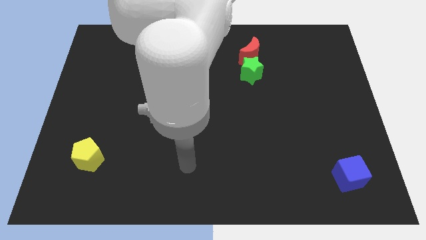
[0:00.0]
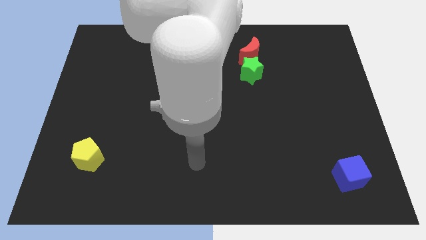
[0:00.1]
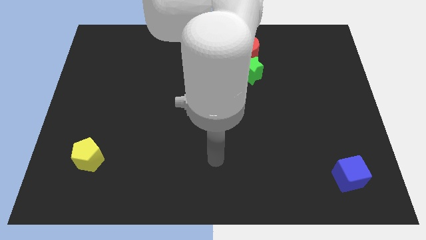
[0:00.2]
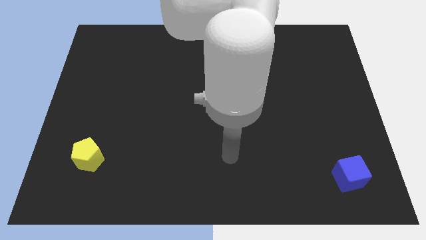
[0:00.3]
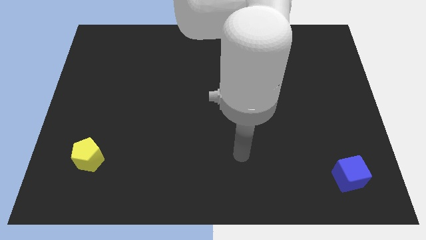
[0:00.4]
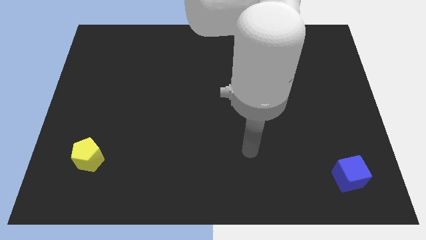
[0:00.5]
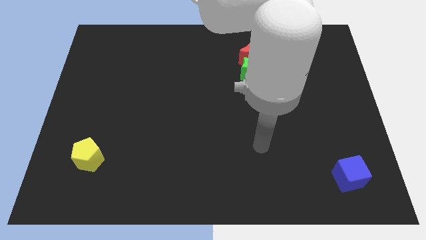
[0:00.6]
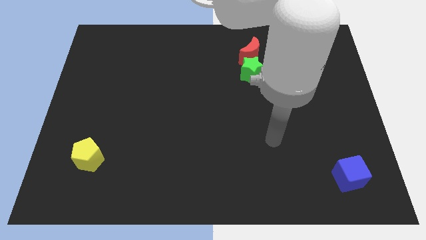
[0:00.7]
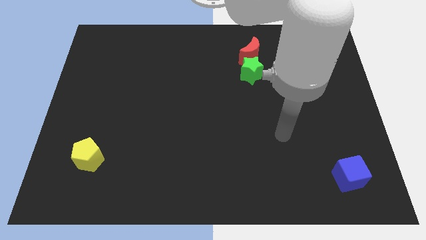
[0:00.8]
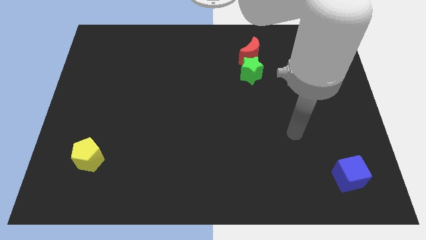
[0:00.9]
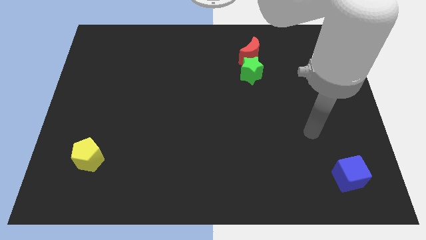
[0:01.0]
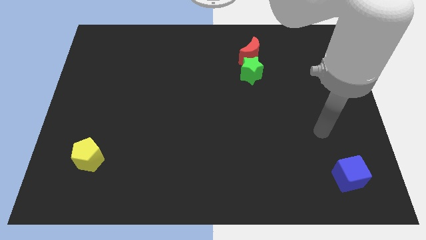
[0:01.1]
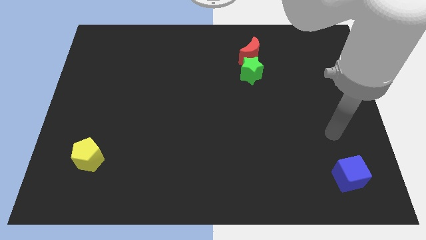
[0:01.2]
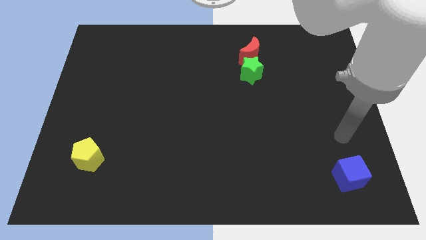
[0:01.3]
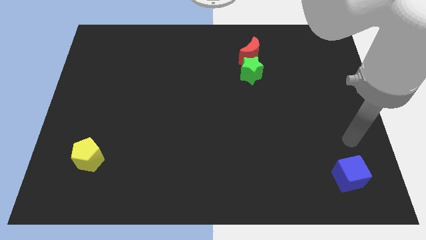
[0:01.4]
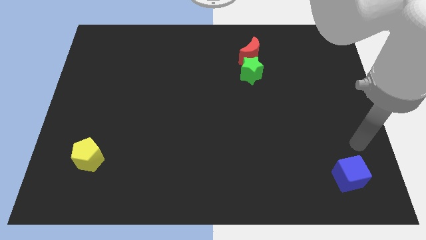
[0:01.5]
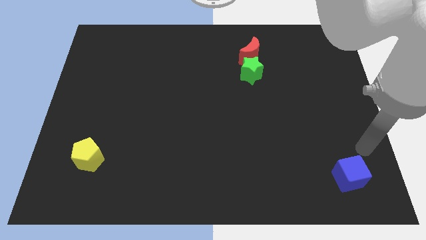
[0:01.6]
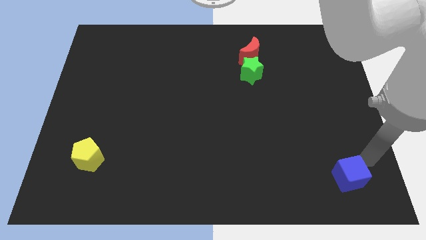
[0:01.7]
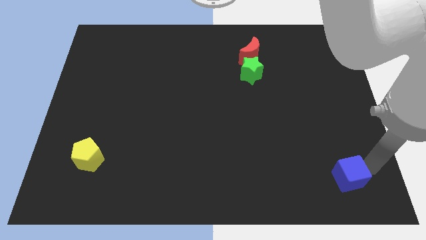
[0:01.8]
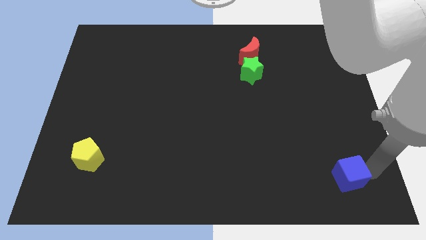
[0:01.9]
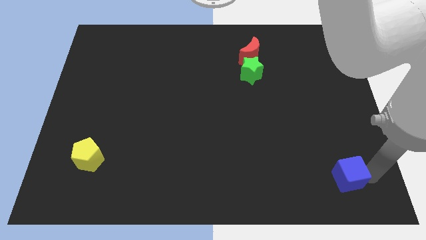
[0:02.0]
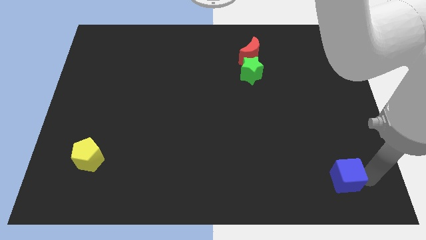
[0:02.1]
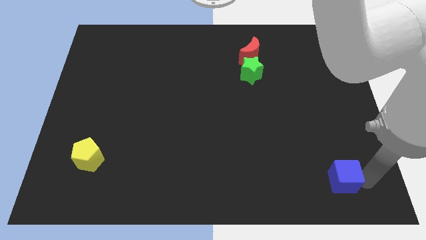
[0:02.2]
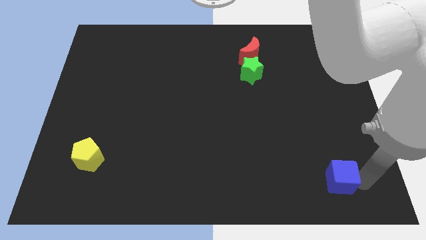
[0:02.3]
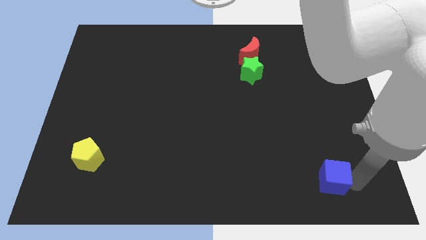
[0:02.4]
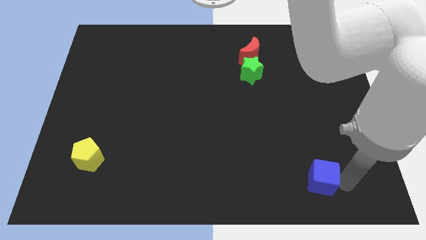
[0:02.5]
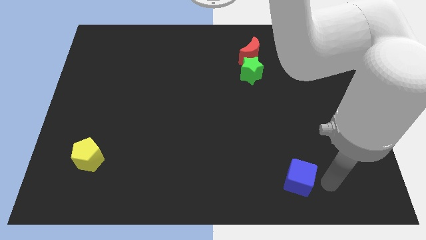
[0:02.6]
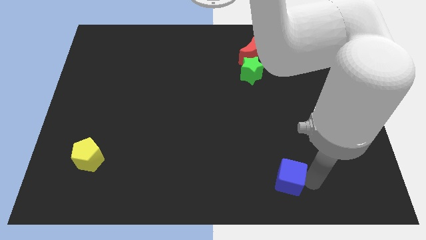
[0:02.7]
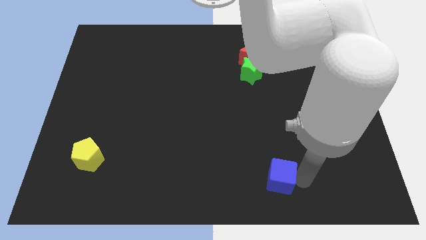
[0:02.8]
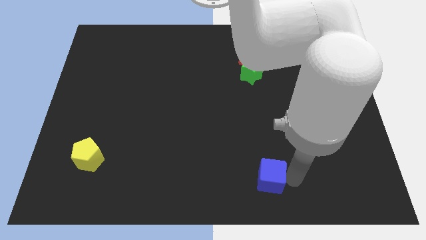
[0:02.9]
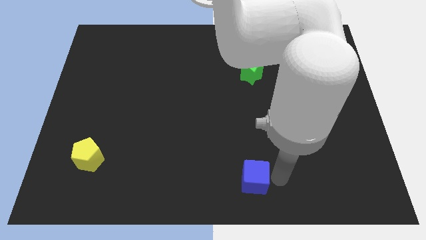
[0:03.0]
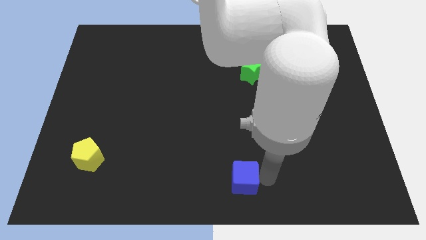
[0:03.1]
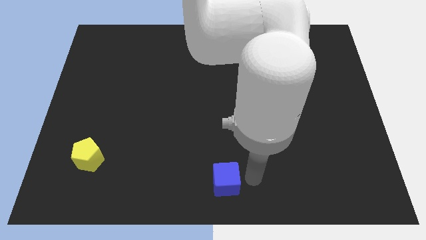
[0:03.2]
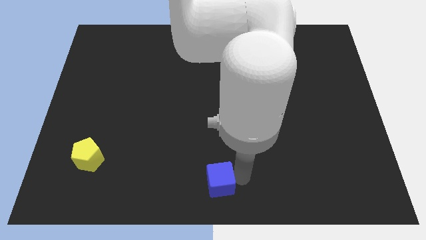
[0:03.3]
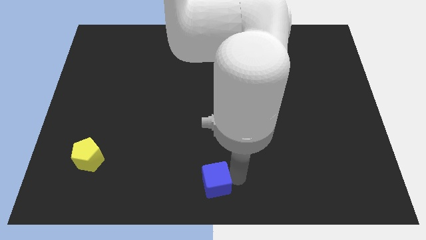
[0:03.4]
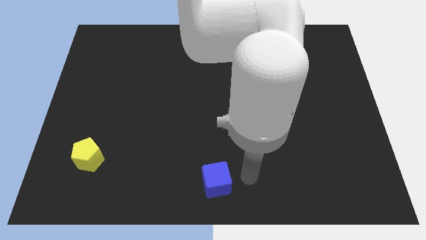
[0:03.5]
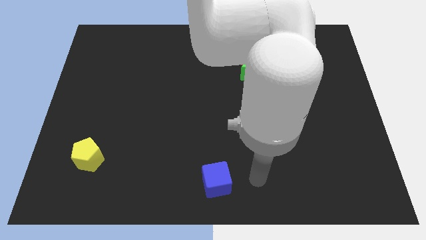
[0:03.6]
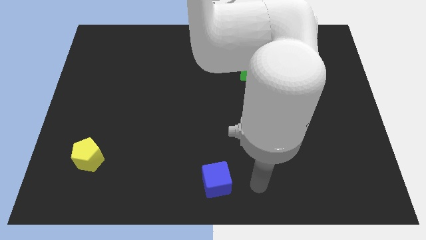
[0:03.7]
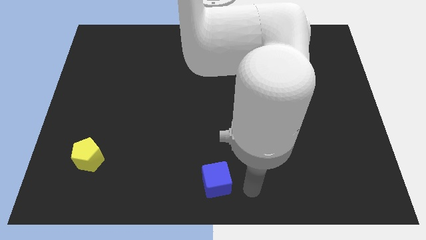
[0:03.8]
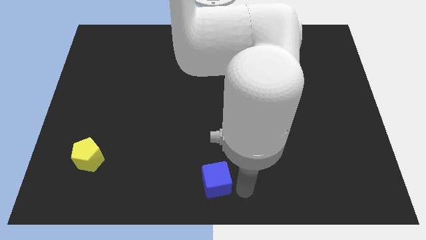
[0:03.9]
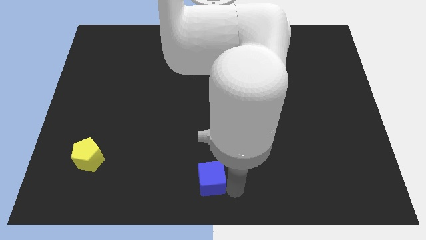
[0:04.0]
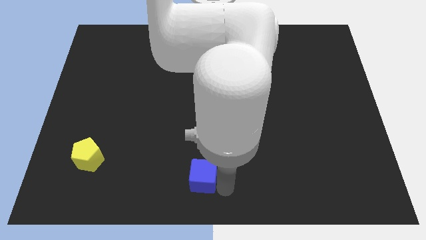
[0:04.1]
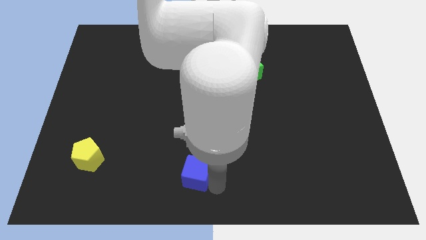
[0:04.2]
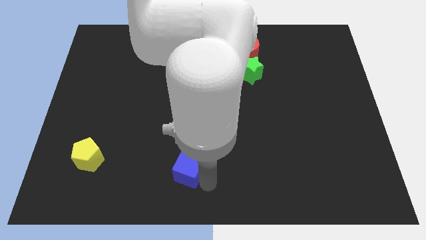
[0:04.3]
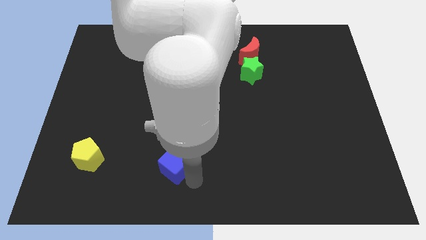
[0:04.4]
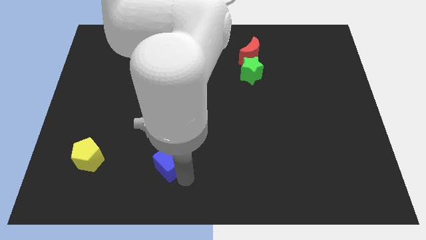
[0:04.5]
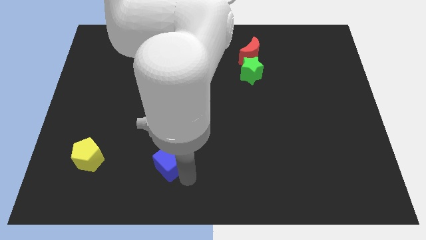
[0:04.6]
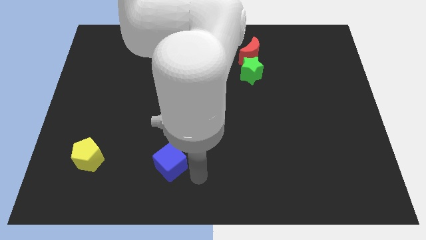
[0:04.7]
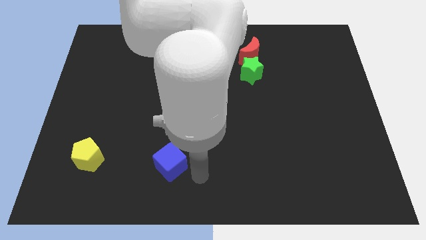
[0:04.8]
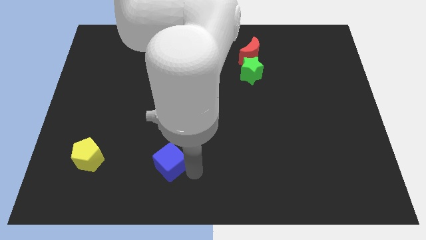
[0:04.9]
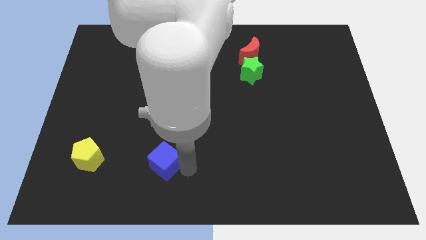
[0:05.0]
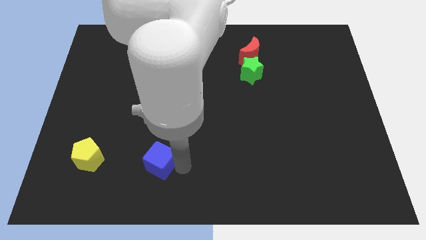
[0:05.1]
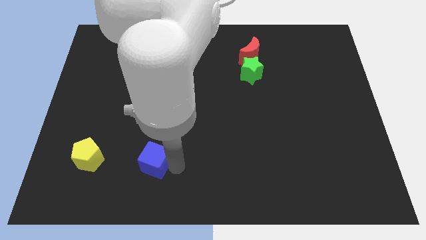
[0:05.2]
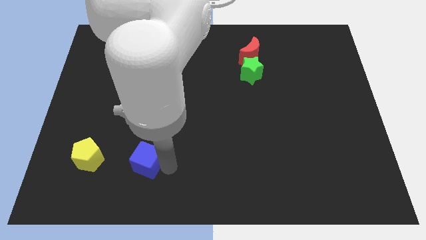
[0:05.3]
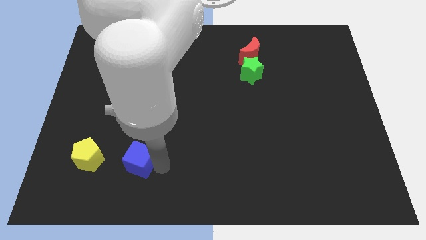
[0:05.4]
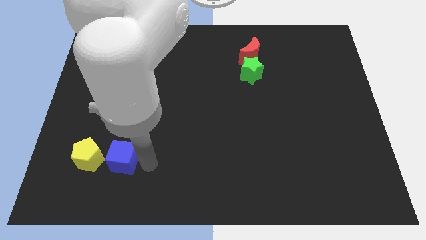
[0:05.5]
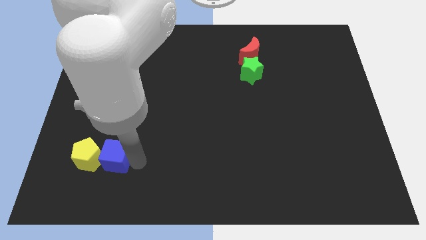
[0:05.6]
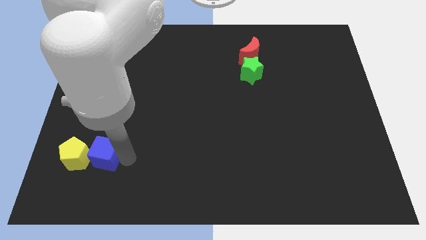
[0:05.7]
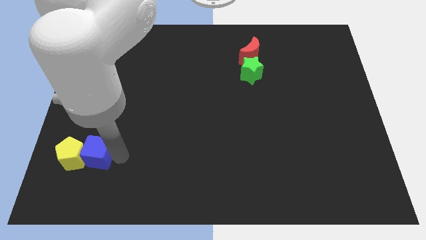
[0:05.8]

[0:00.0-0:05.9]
put the blue block to the yellow block

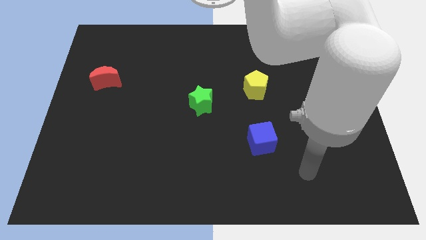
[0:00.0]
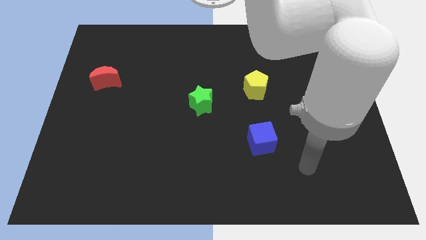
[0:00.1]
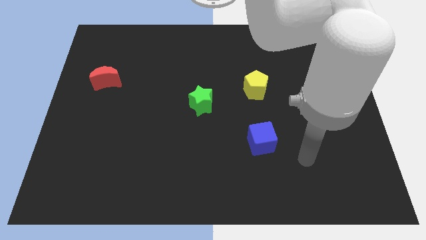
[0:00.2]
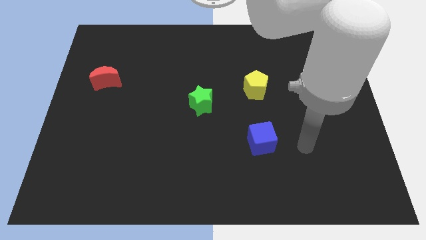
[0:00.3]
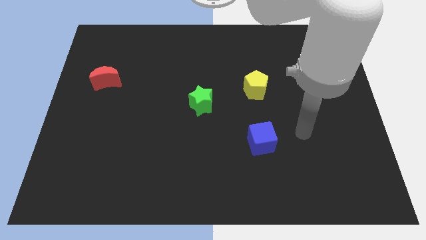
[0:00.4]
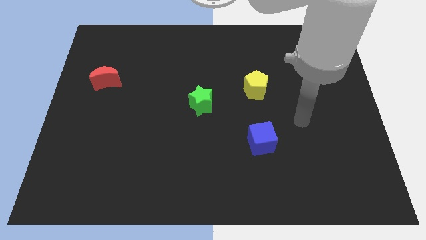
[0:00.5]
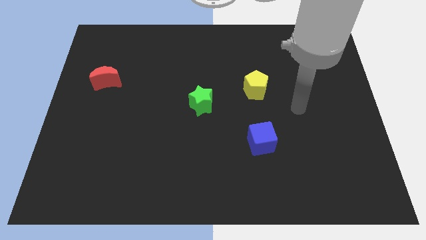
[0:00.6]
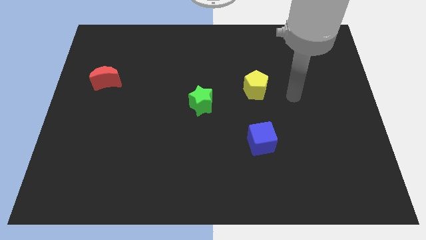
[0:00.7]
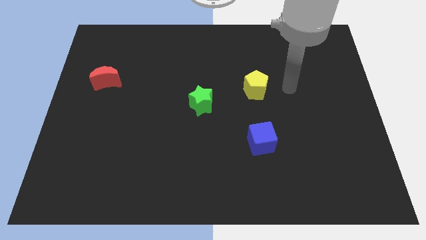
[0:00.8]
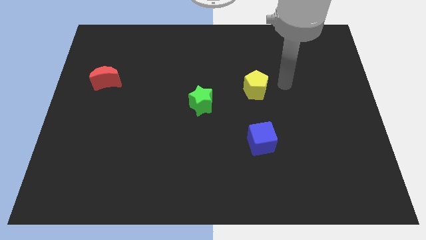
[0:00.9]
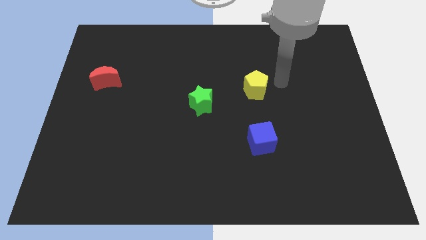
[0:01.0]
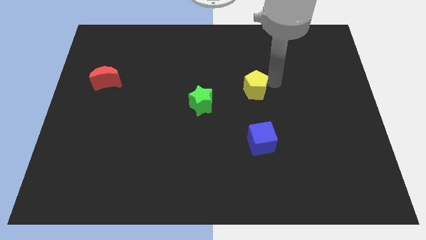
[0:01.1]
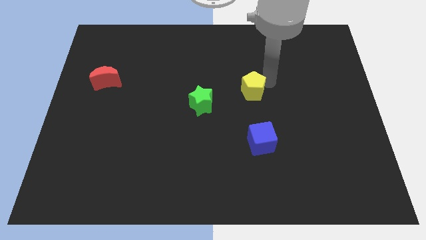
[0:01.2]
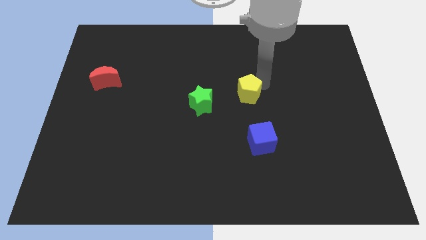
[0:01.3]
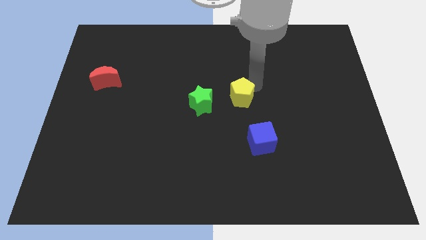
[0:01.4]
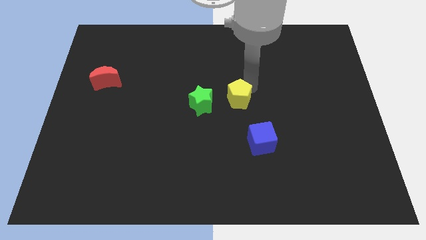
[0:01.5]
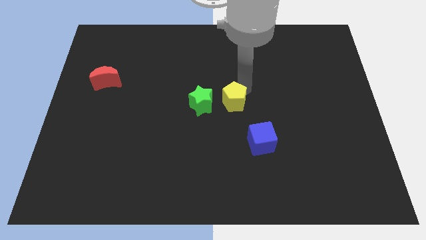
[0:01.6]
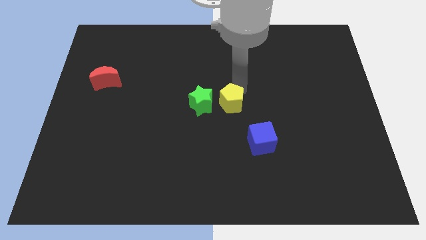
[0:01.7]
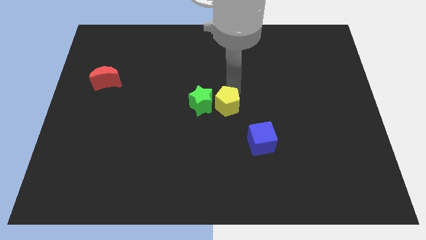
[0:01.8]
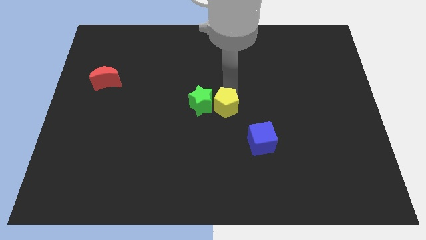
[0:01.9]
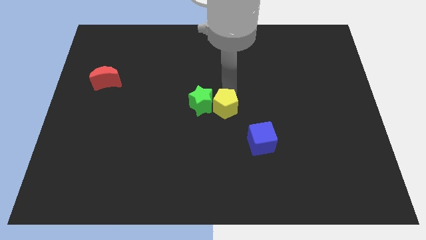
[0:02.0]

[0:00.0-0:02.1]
push the yellow pentagon to the green block

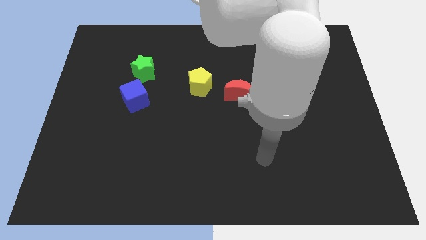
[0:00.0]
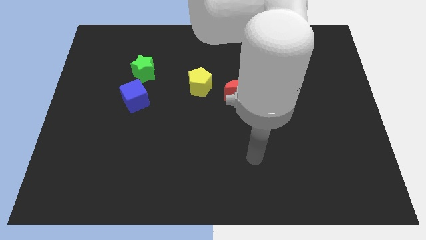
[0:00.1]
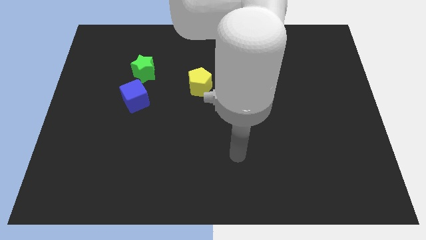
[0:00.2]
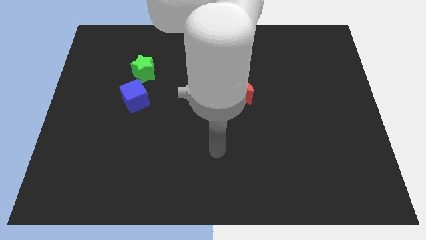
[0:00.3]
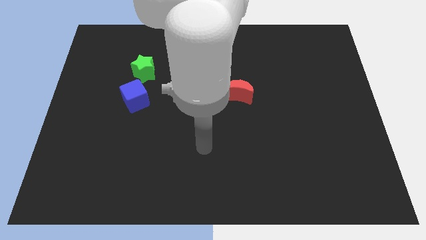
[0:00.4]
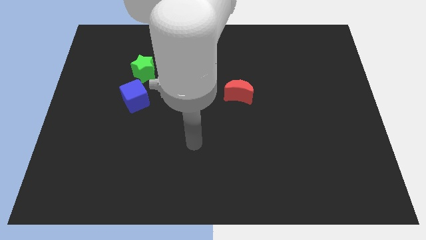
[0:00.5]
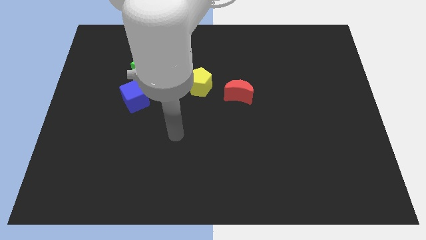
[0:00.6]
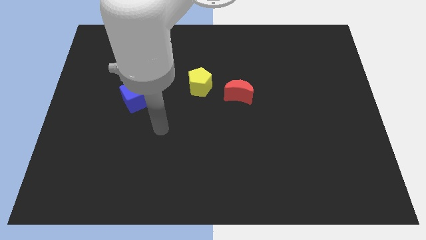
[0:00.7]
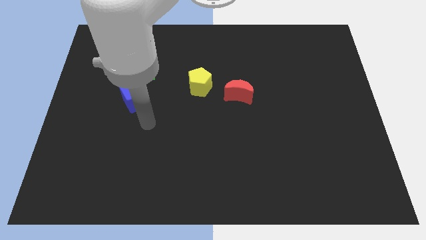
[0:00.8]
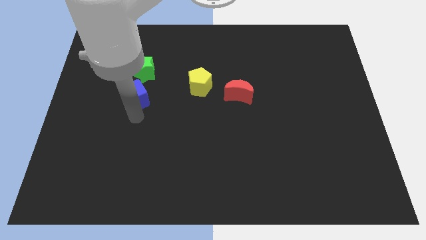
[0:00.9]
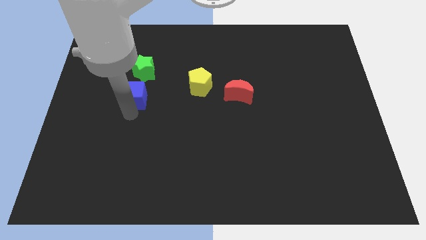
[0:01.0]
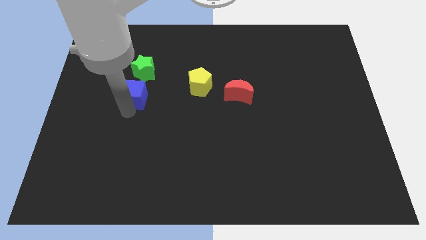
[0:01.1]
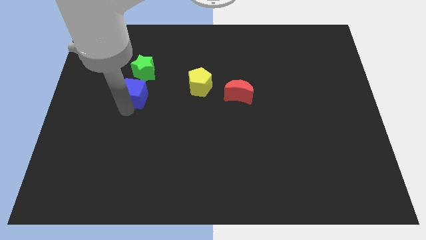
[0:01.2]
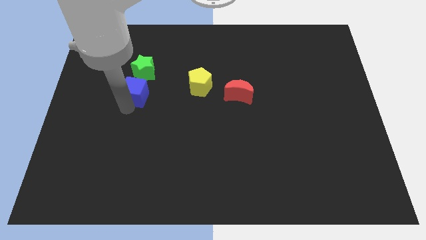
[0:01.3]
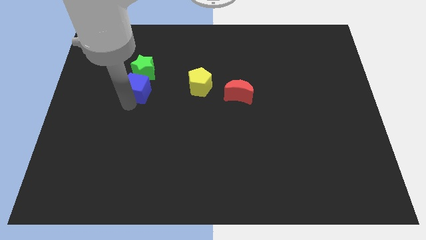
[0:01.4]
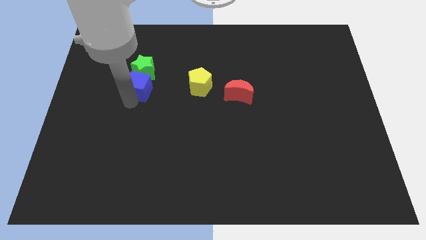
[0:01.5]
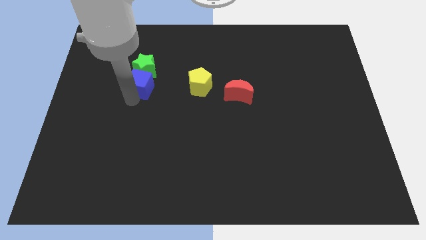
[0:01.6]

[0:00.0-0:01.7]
push the blue cube close to the star
